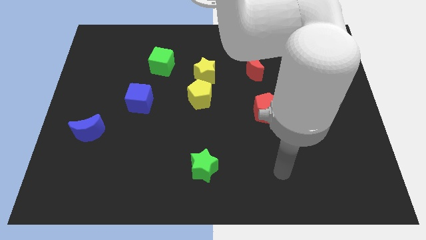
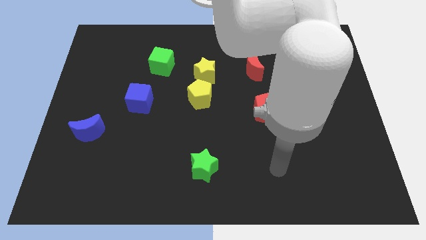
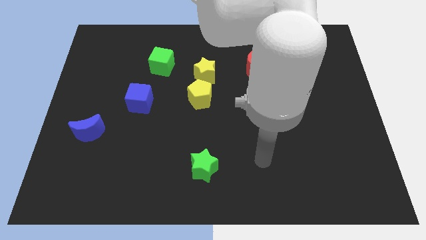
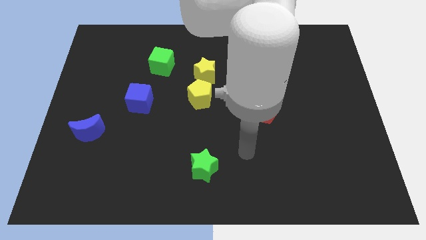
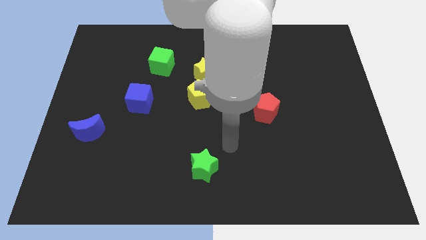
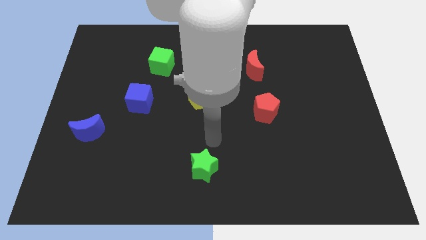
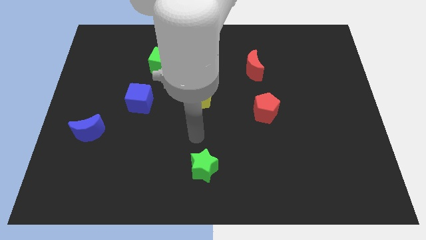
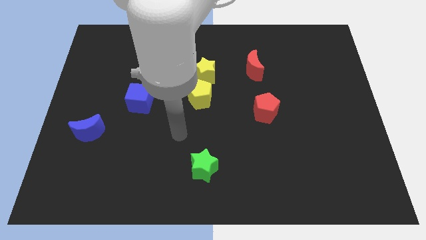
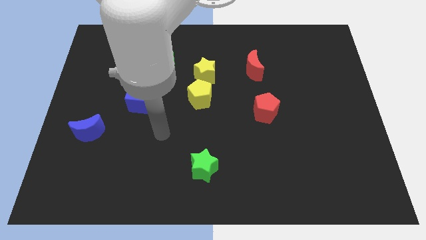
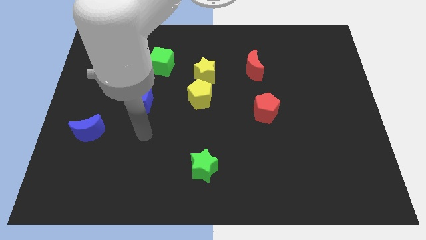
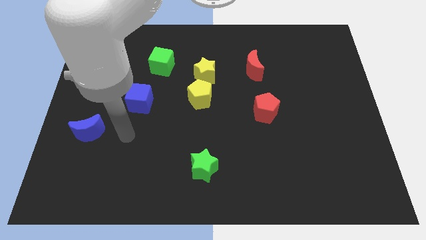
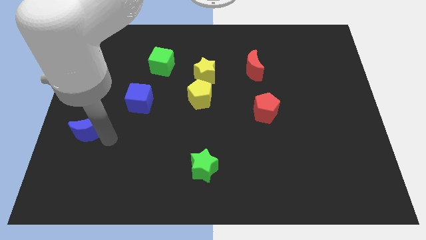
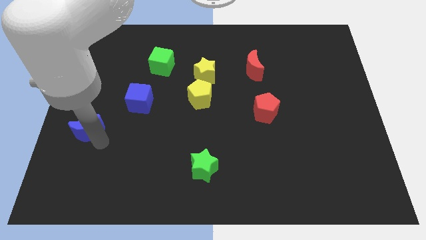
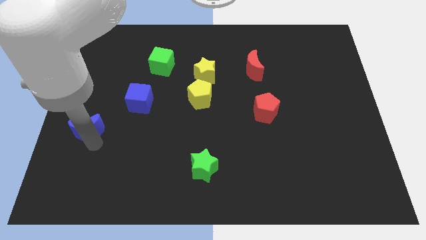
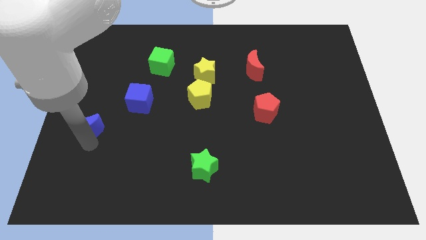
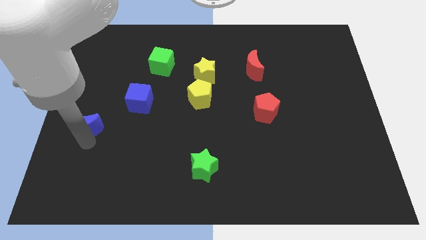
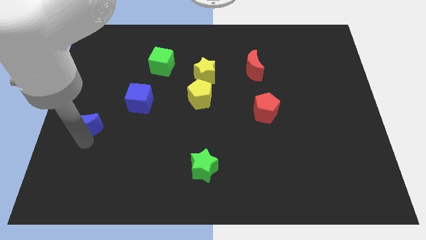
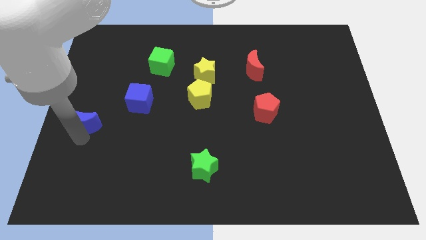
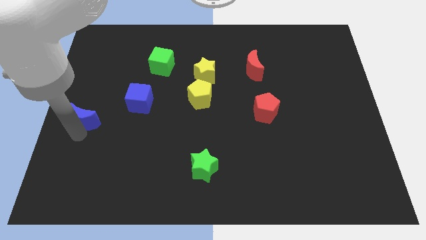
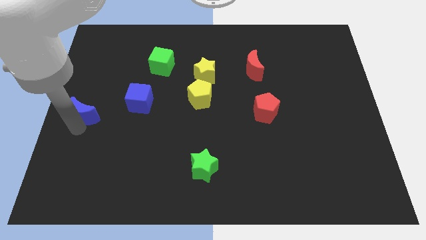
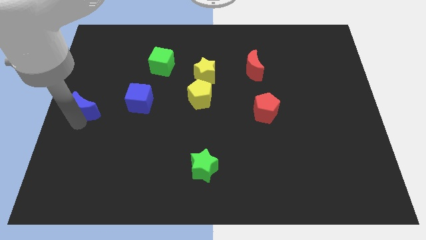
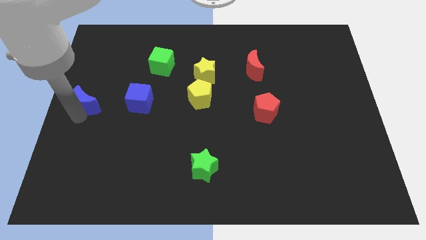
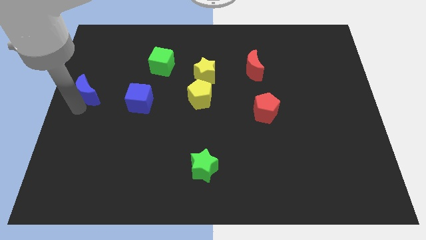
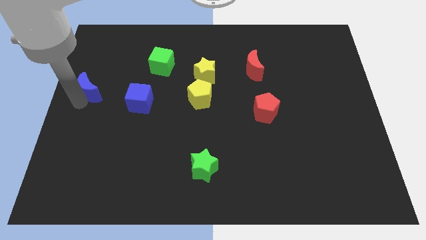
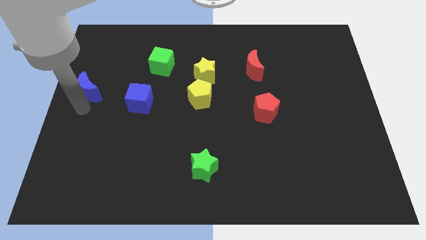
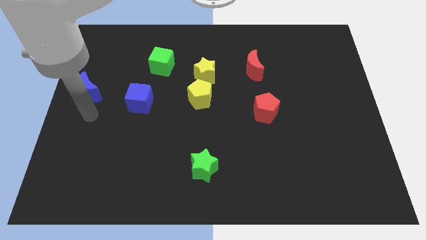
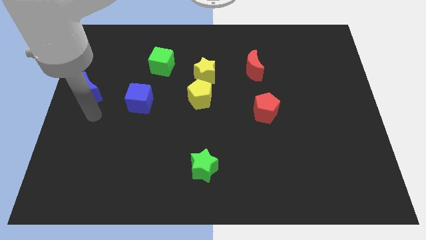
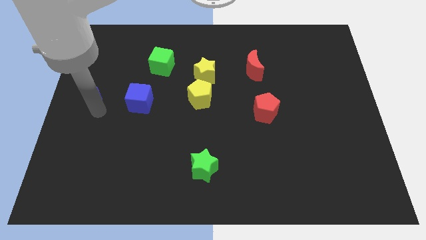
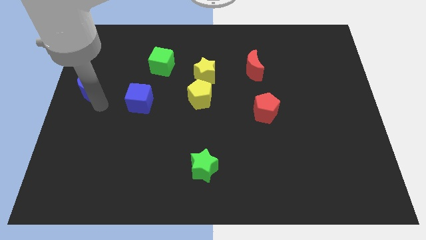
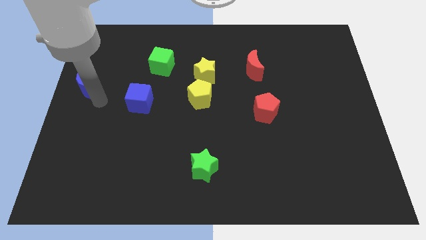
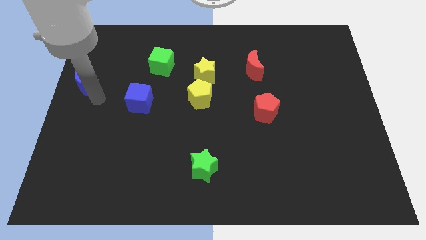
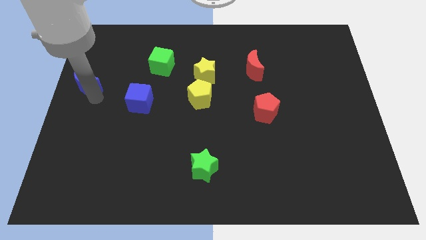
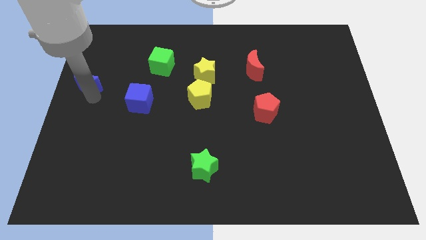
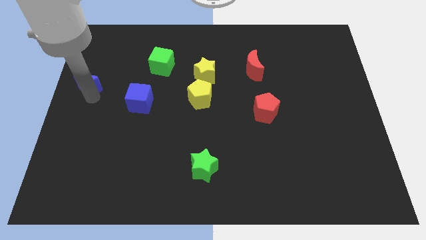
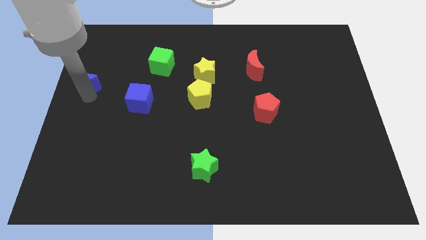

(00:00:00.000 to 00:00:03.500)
move the blue moon left to the blue cube

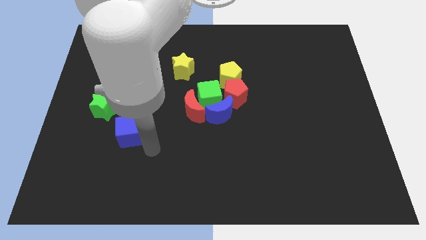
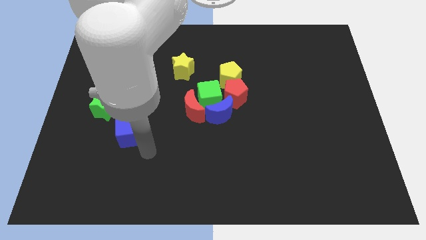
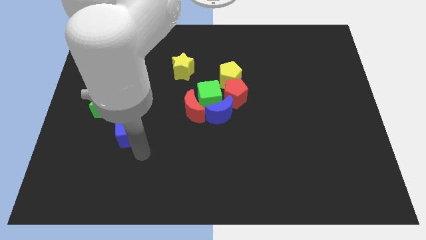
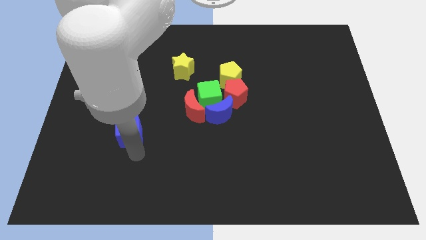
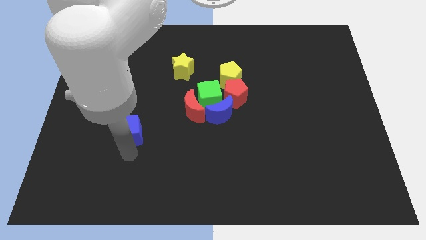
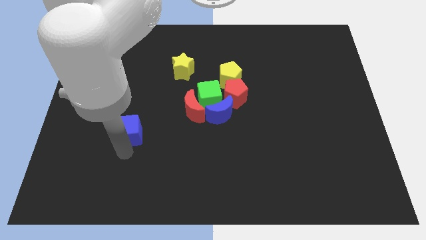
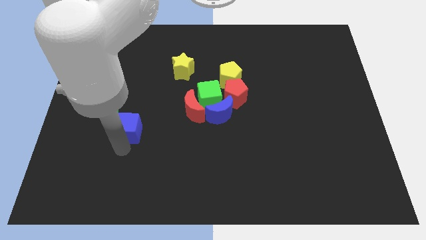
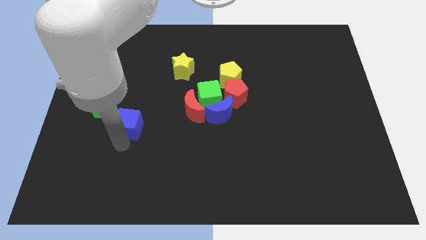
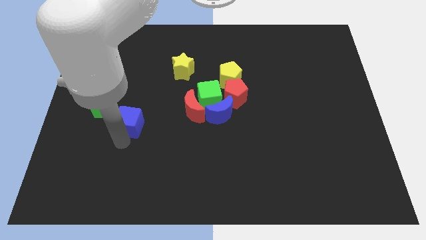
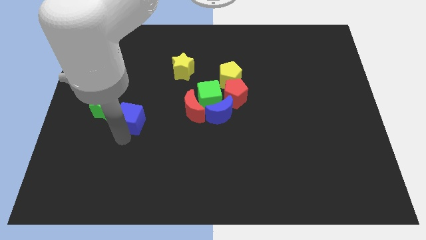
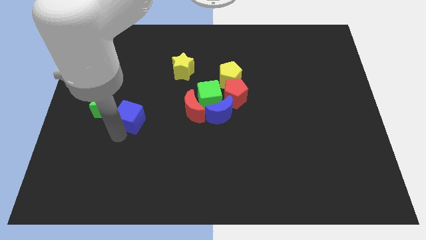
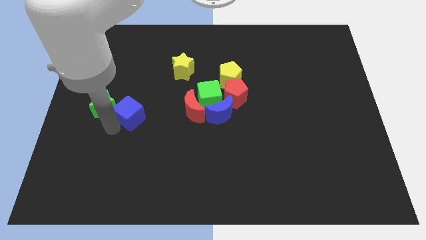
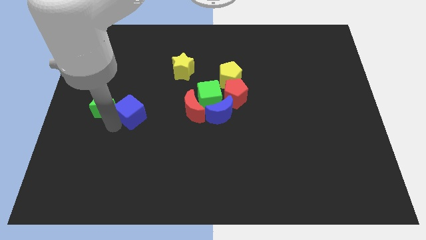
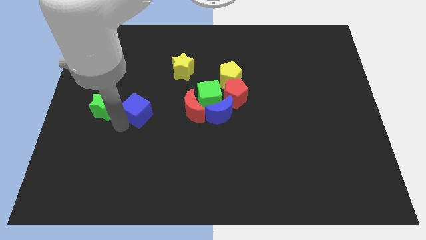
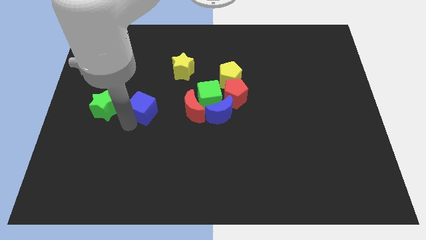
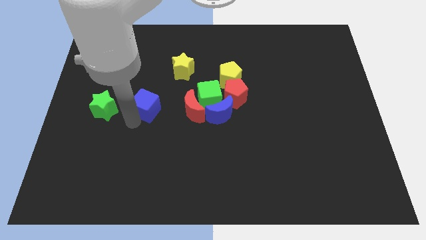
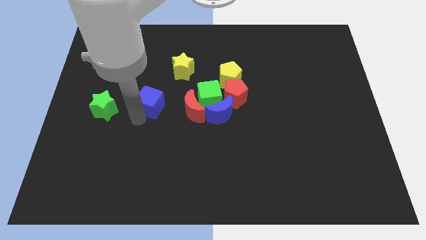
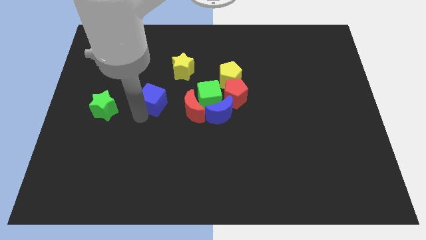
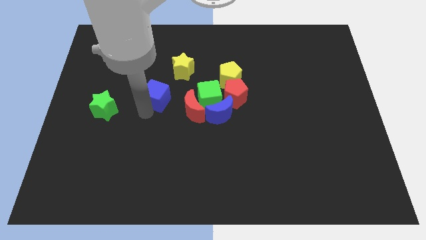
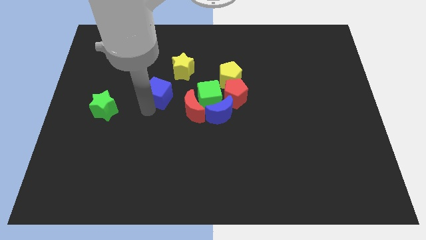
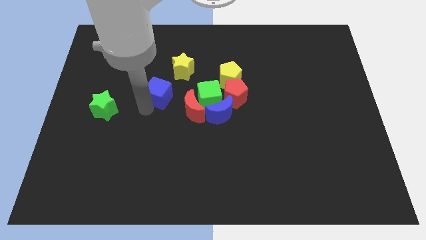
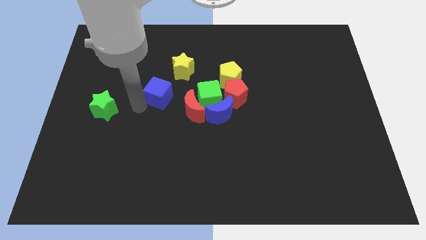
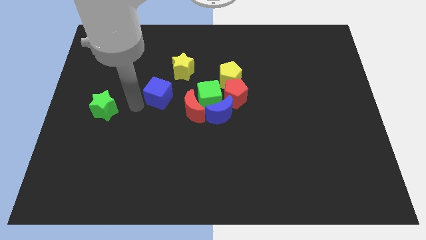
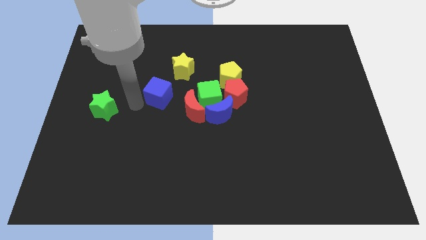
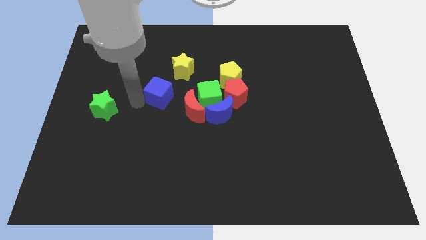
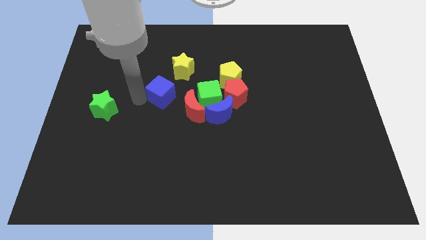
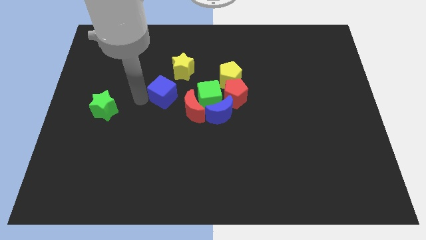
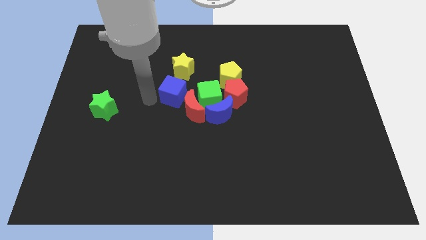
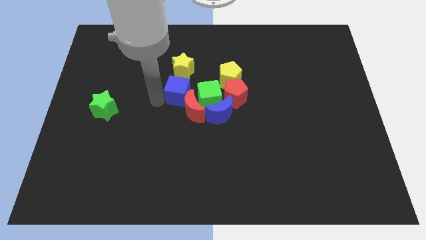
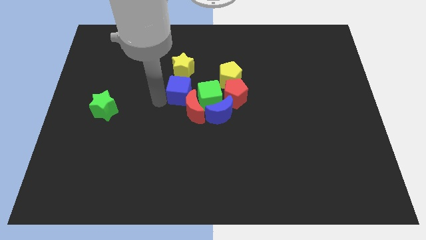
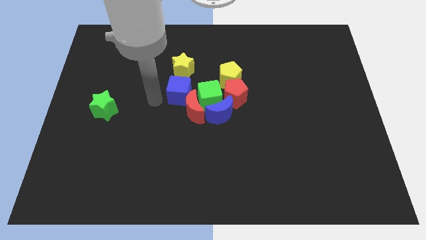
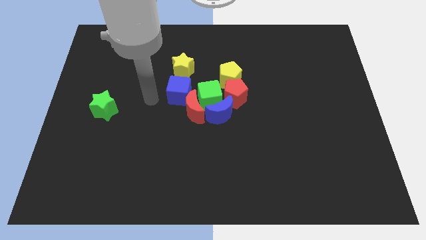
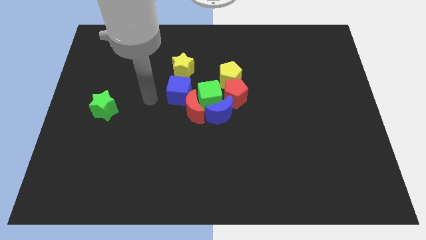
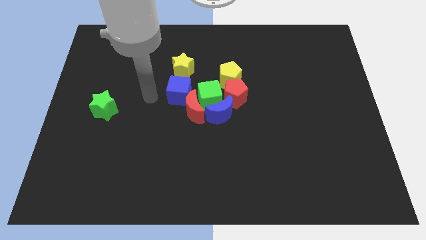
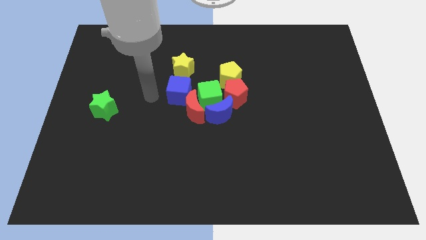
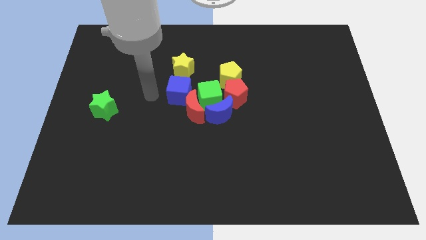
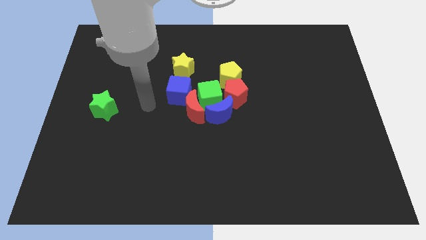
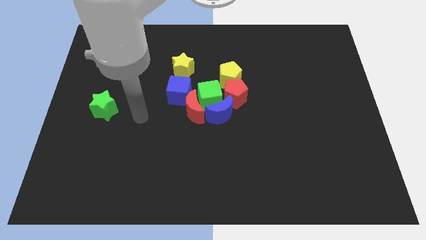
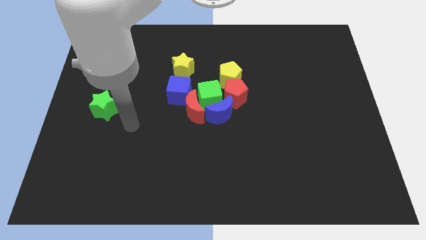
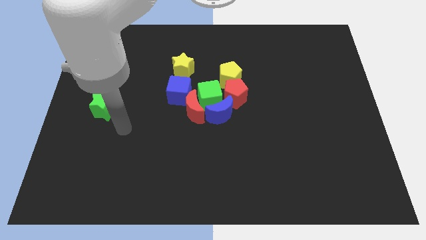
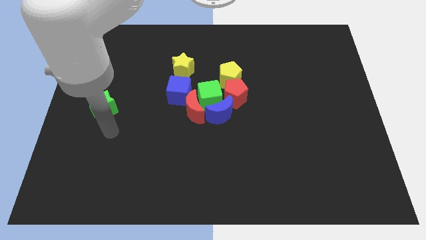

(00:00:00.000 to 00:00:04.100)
push the blue cube to the bottom of the yellow star

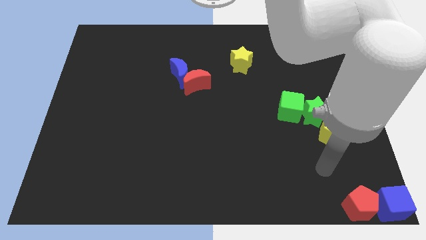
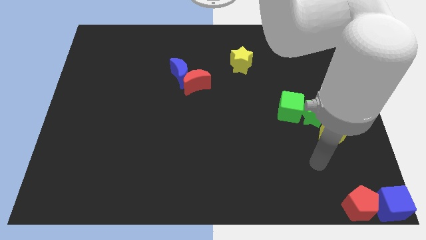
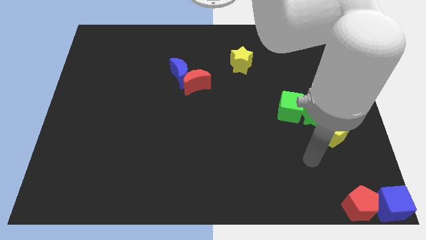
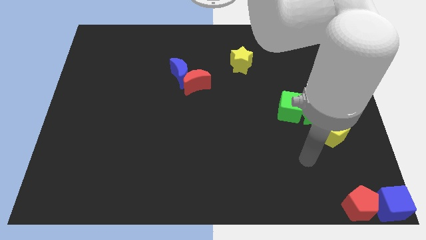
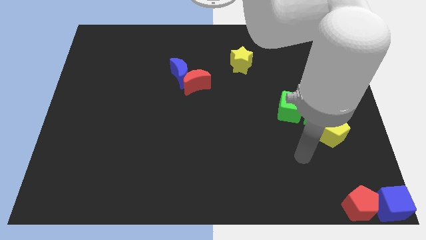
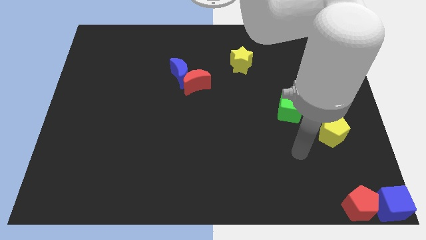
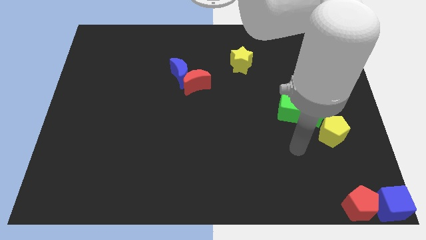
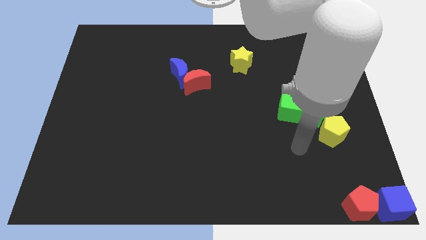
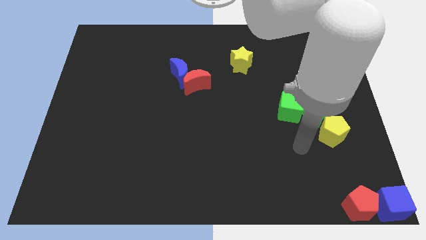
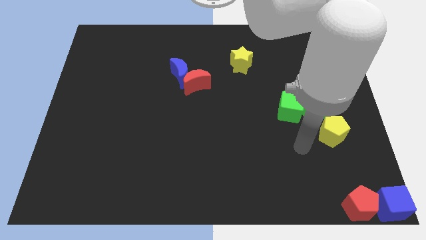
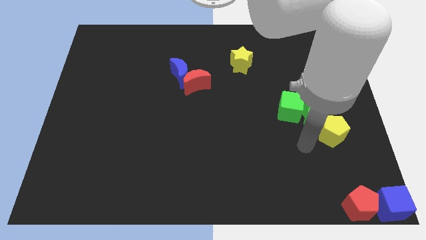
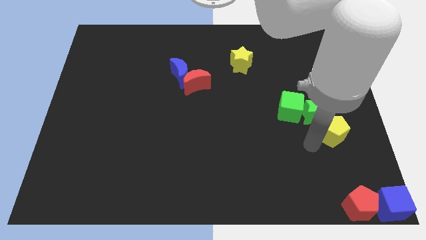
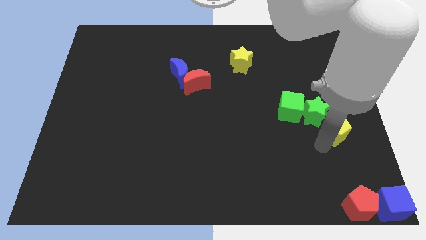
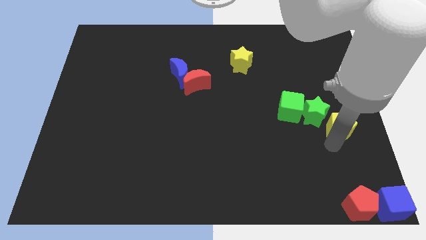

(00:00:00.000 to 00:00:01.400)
place your arm below the yellow pentagon

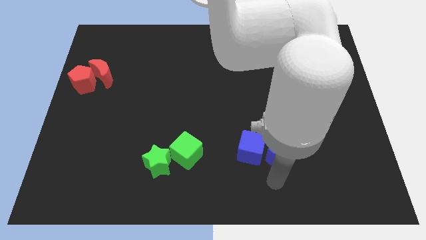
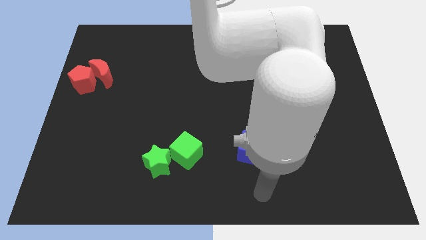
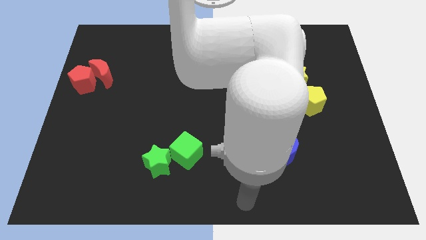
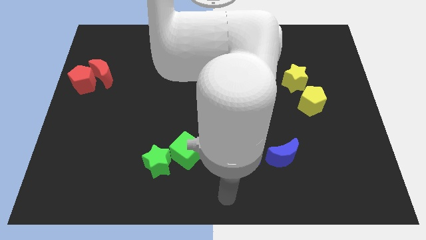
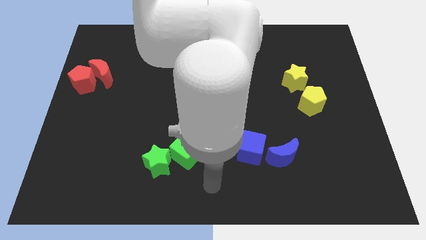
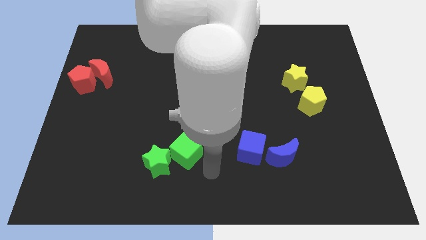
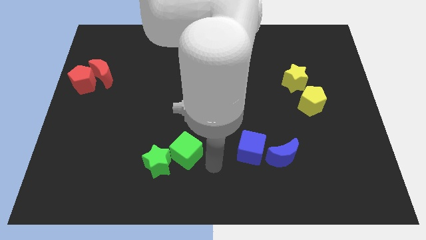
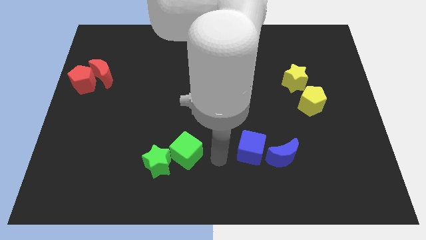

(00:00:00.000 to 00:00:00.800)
place your hand in between the group of green and blue blocks
